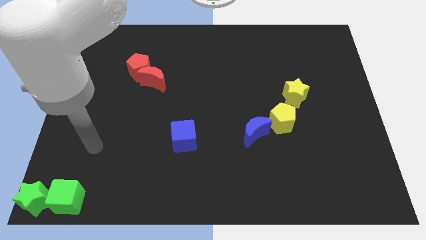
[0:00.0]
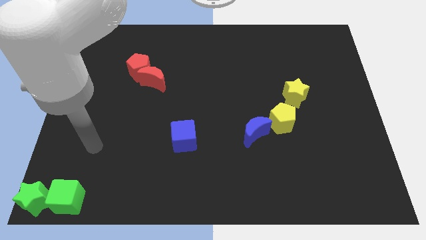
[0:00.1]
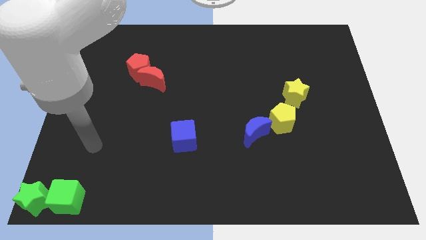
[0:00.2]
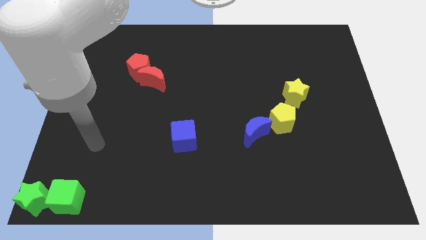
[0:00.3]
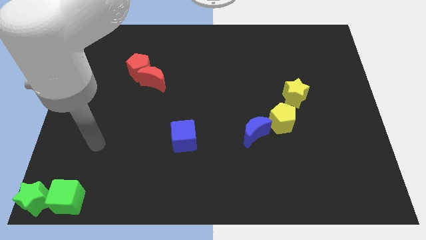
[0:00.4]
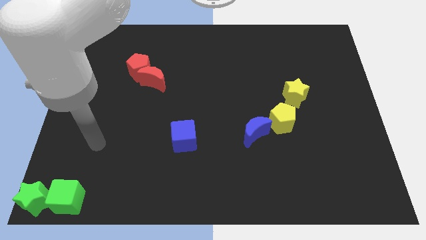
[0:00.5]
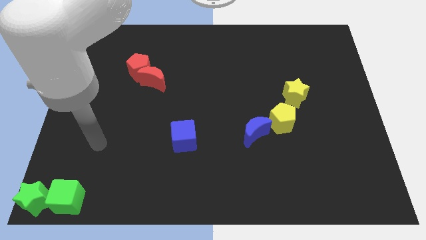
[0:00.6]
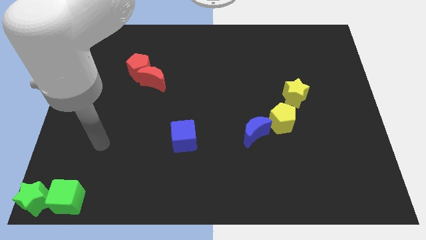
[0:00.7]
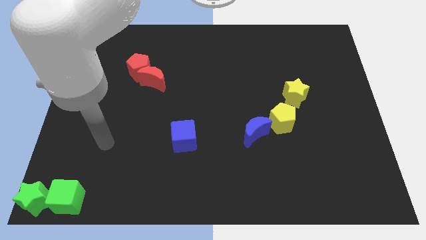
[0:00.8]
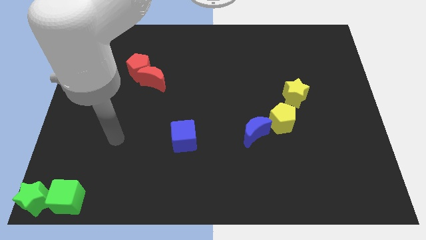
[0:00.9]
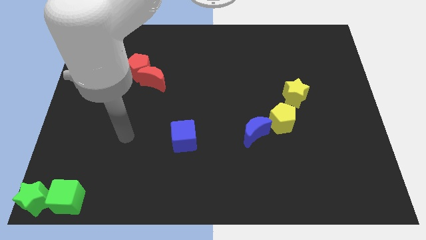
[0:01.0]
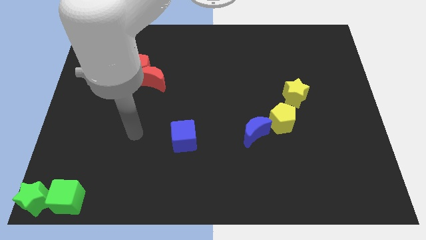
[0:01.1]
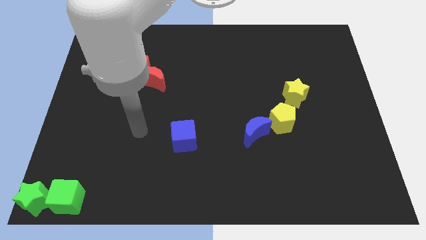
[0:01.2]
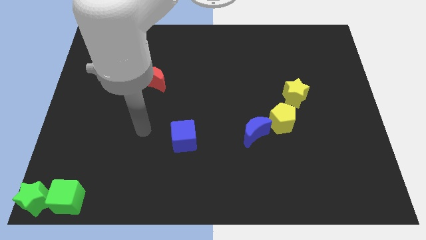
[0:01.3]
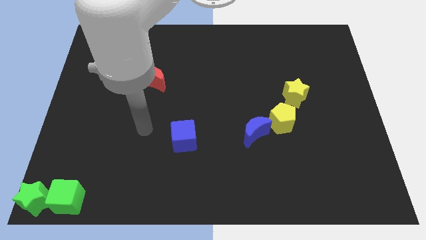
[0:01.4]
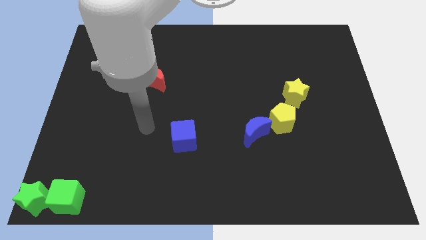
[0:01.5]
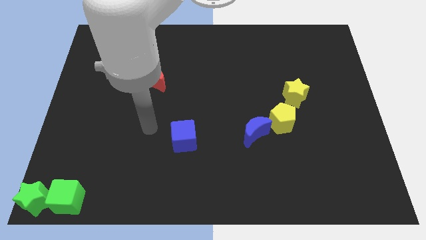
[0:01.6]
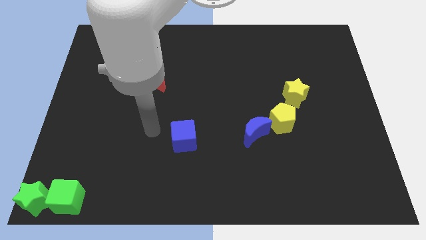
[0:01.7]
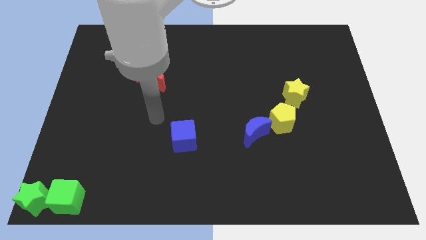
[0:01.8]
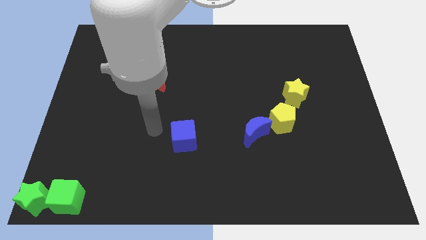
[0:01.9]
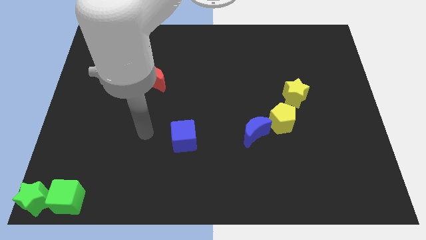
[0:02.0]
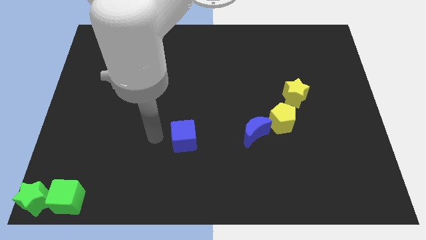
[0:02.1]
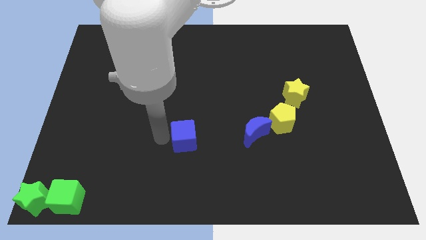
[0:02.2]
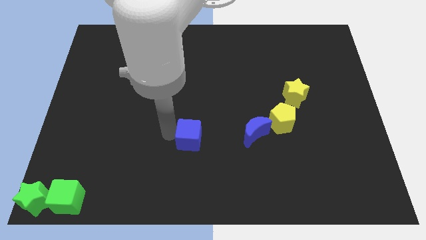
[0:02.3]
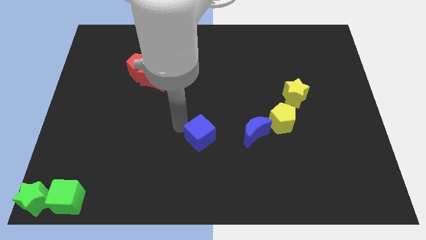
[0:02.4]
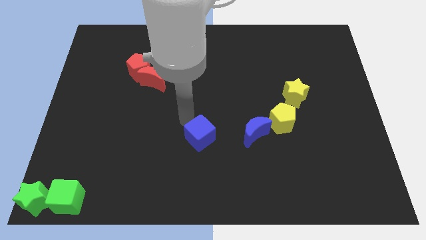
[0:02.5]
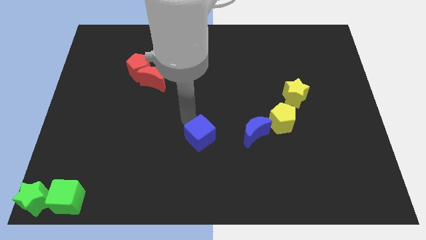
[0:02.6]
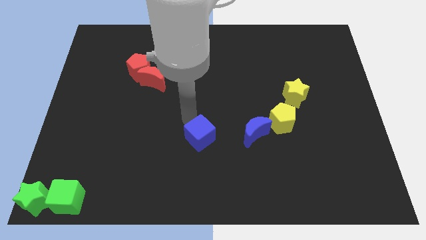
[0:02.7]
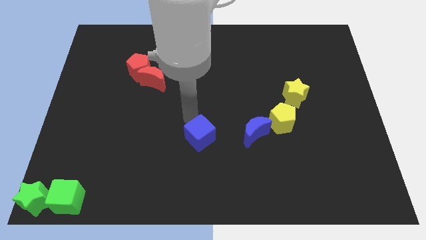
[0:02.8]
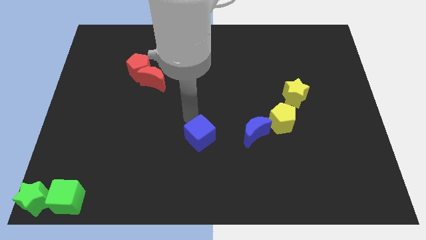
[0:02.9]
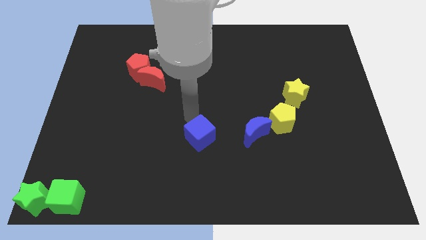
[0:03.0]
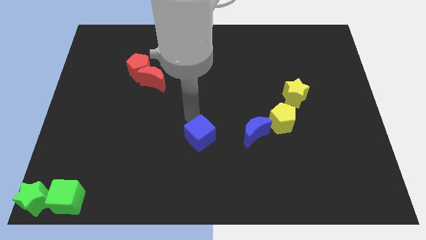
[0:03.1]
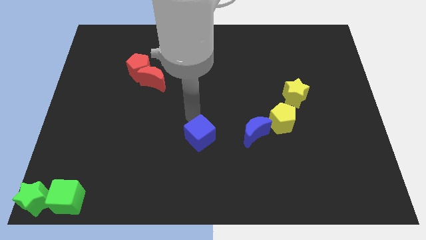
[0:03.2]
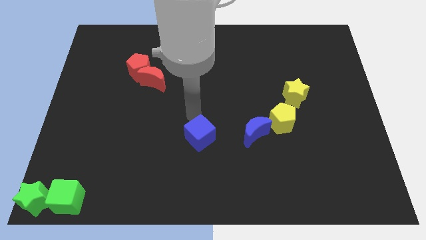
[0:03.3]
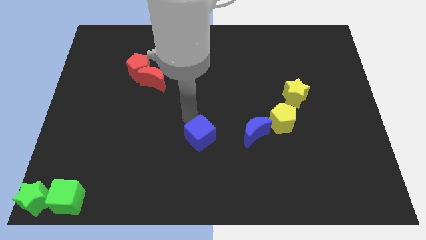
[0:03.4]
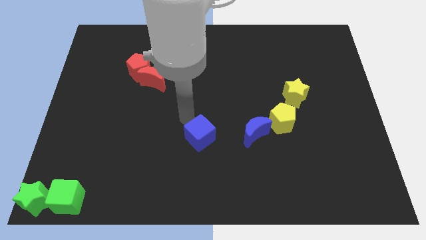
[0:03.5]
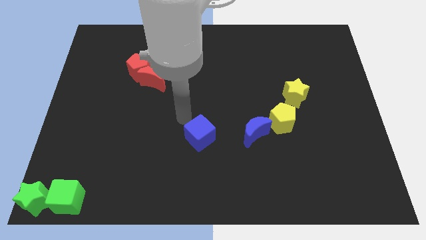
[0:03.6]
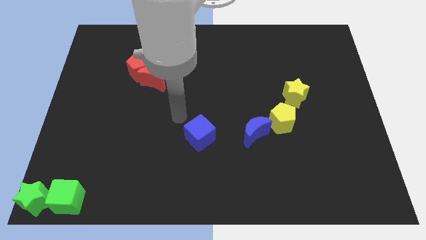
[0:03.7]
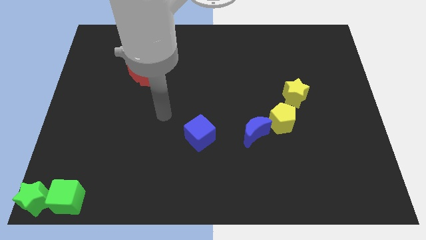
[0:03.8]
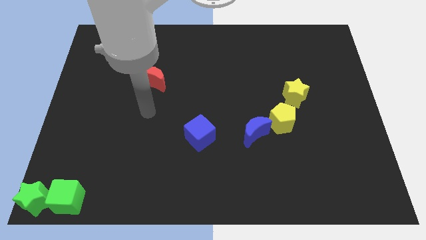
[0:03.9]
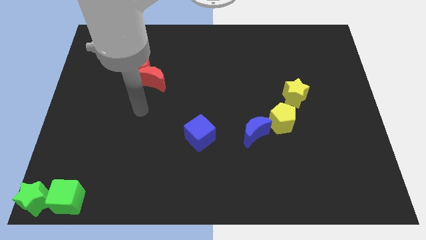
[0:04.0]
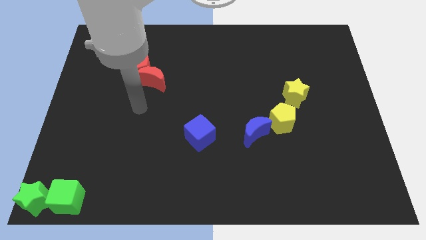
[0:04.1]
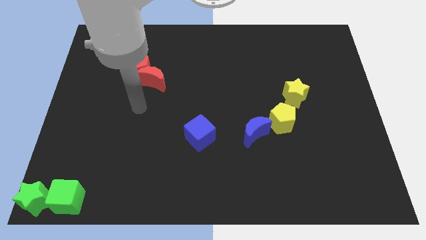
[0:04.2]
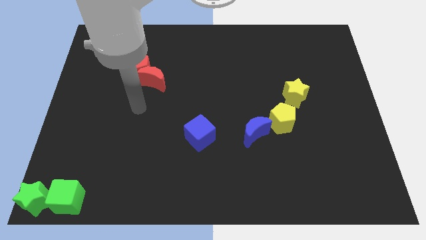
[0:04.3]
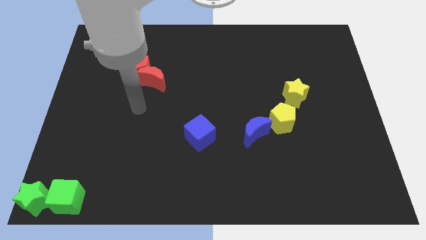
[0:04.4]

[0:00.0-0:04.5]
move the blue cube left to the blue moon

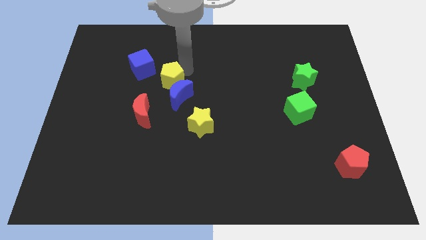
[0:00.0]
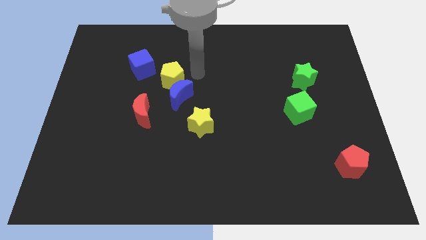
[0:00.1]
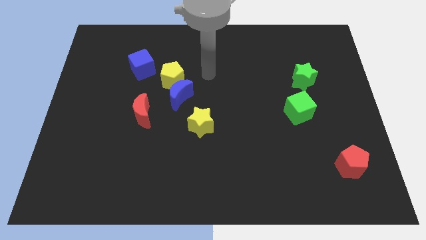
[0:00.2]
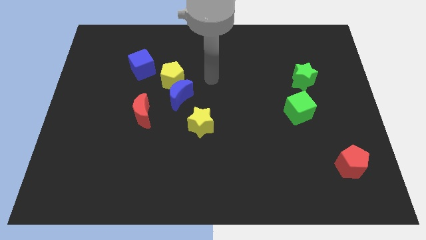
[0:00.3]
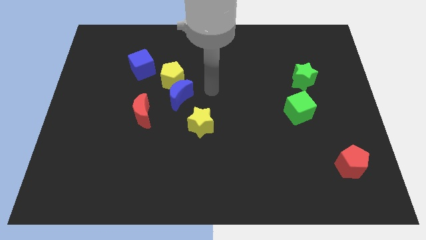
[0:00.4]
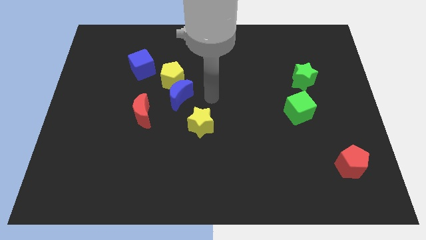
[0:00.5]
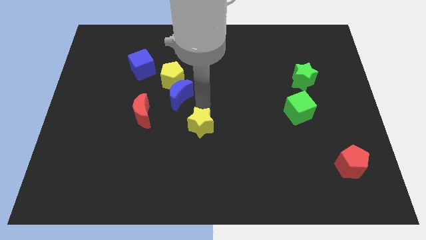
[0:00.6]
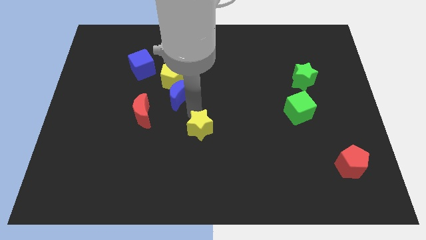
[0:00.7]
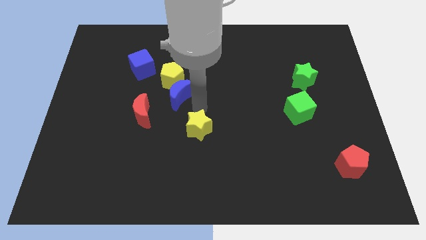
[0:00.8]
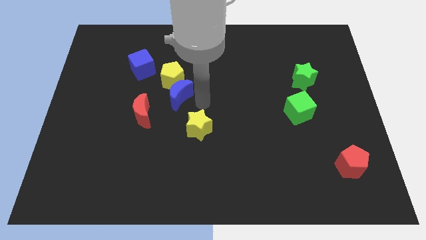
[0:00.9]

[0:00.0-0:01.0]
move your arm towards the yellow star

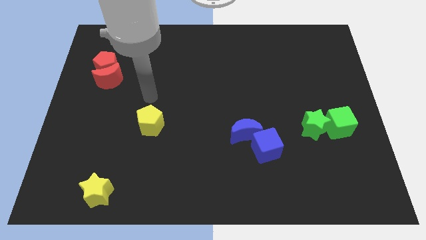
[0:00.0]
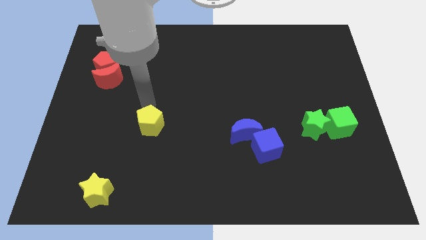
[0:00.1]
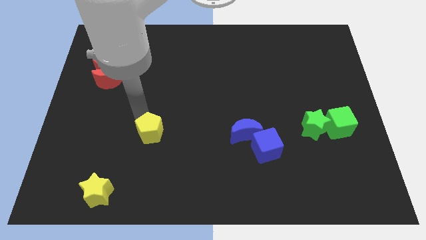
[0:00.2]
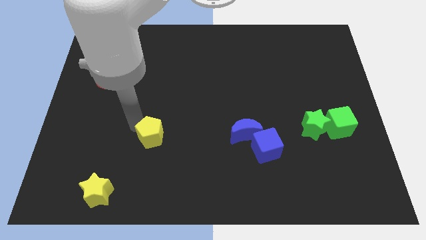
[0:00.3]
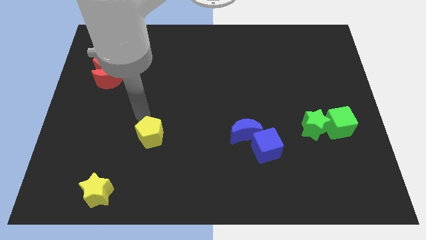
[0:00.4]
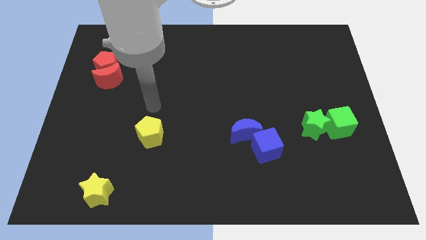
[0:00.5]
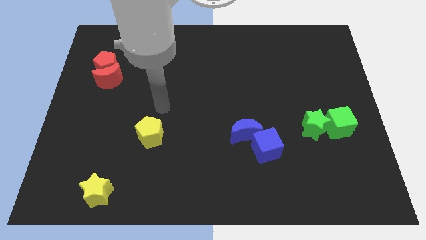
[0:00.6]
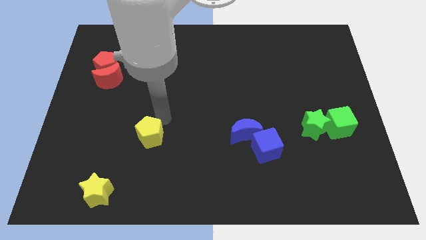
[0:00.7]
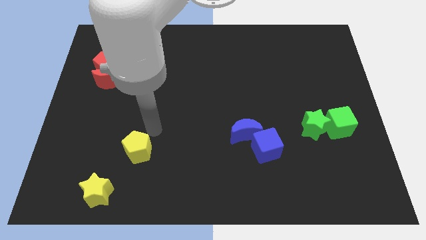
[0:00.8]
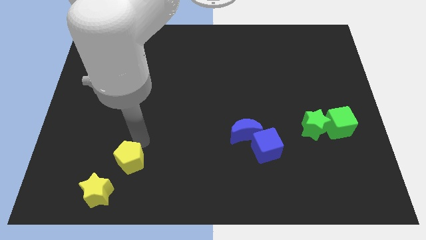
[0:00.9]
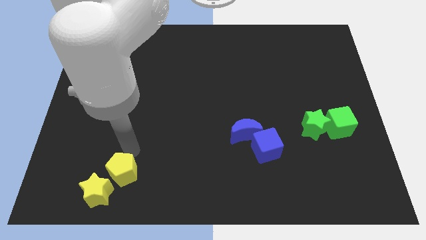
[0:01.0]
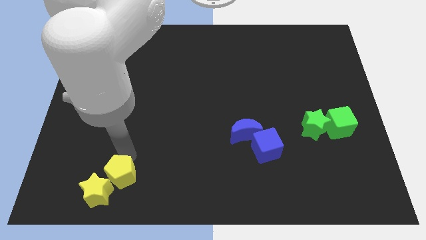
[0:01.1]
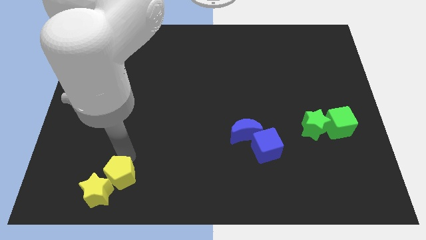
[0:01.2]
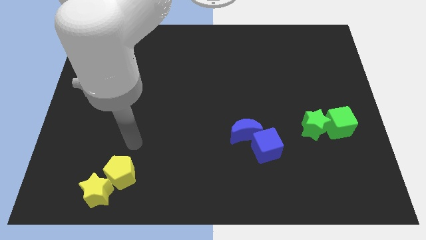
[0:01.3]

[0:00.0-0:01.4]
move the yellow pentagon close to the yellow star

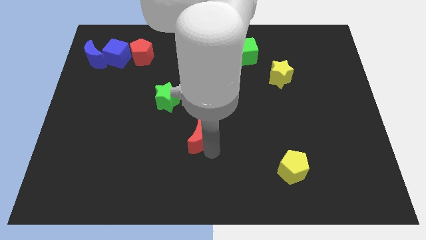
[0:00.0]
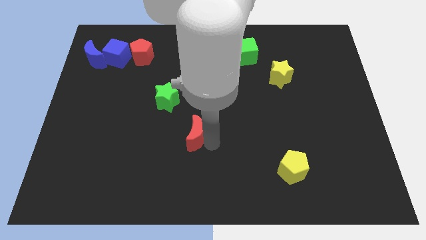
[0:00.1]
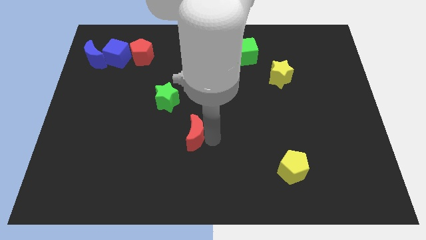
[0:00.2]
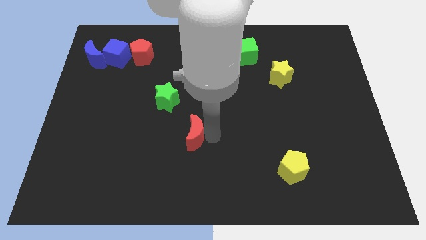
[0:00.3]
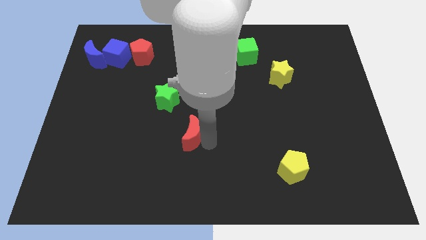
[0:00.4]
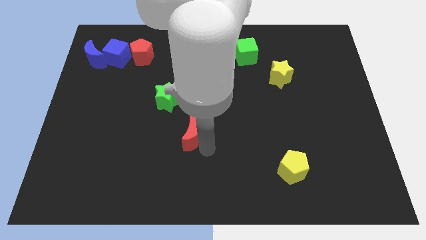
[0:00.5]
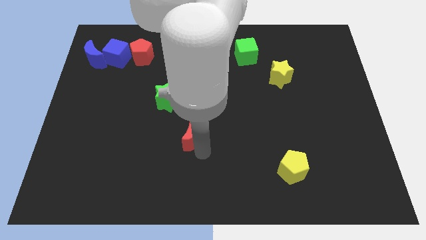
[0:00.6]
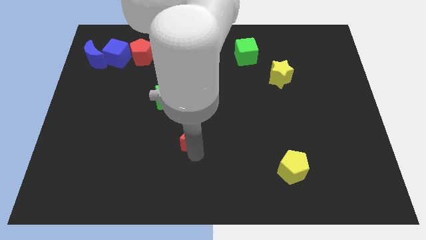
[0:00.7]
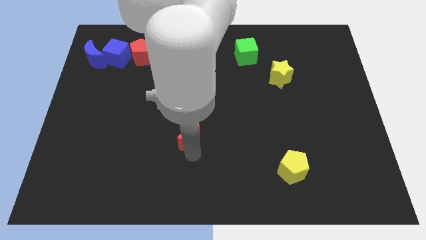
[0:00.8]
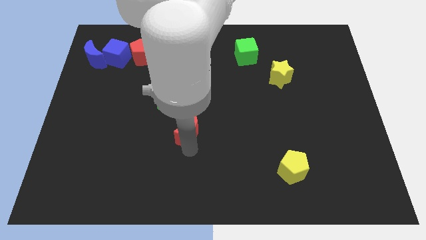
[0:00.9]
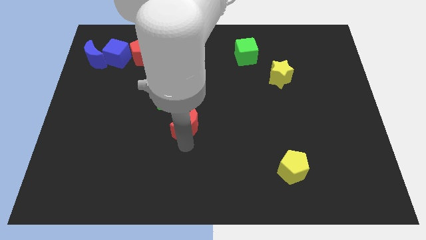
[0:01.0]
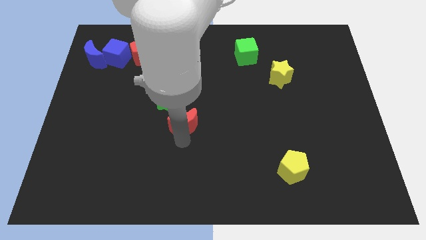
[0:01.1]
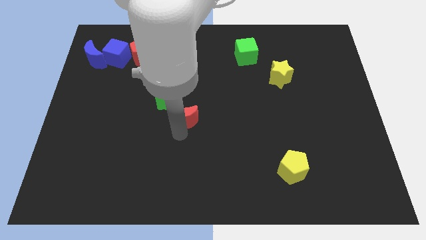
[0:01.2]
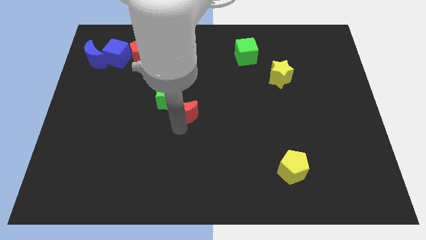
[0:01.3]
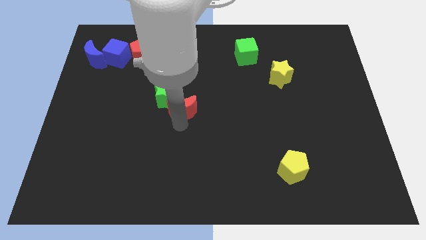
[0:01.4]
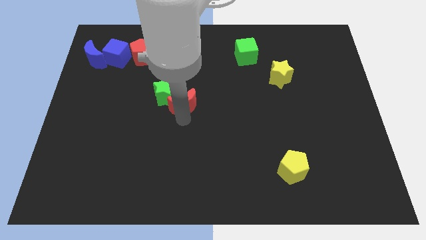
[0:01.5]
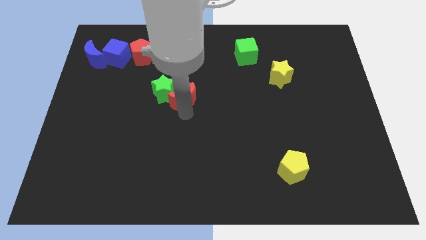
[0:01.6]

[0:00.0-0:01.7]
slide red crescent into the green star

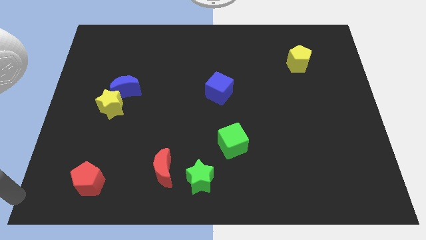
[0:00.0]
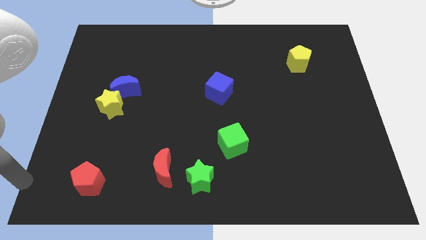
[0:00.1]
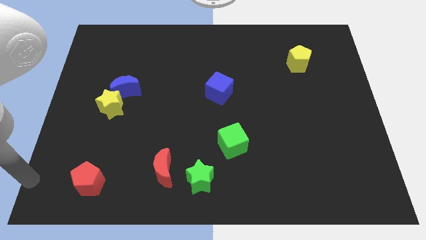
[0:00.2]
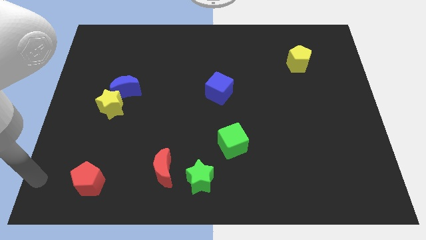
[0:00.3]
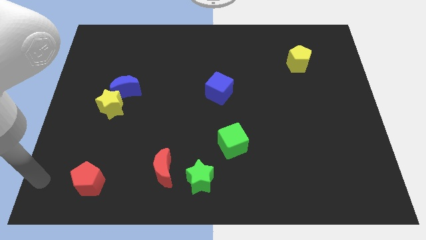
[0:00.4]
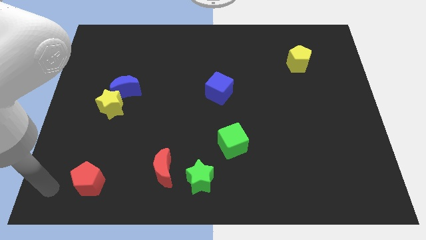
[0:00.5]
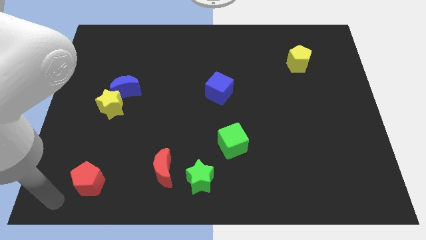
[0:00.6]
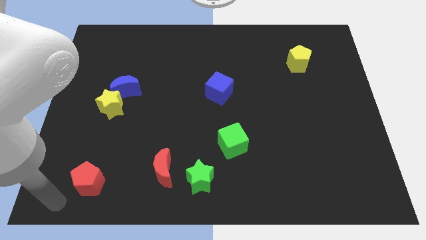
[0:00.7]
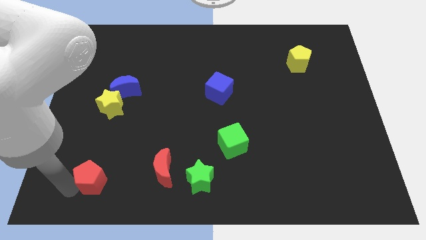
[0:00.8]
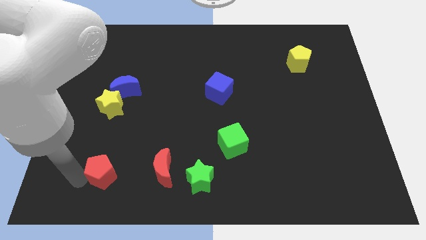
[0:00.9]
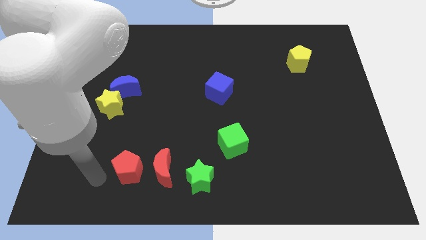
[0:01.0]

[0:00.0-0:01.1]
slide red pentagon towards red moon
